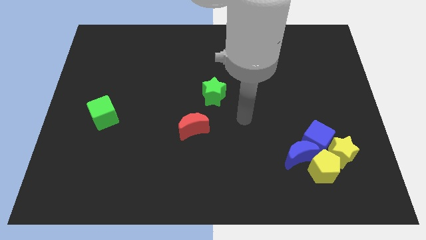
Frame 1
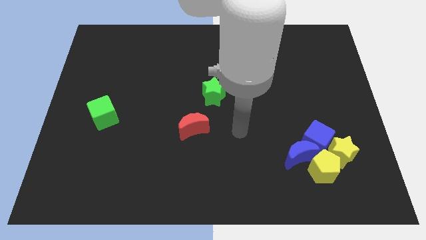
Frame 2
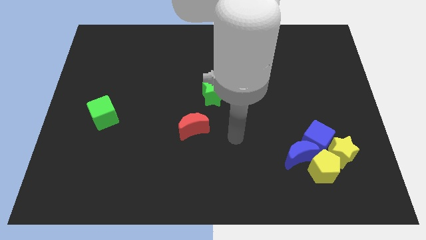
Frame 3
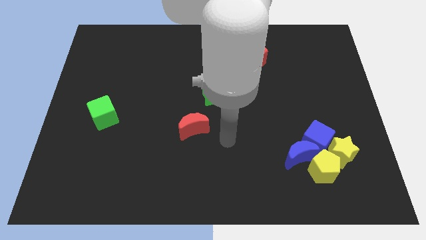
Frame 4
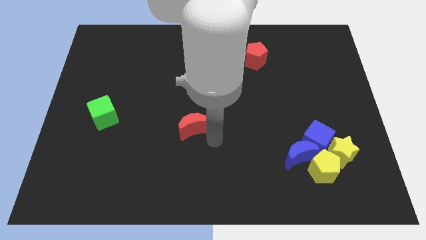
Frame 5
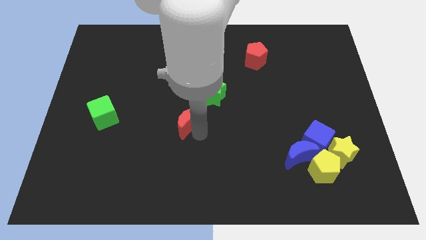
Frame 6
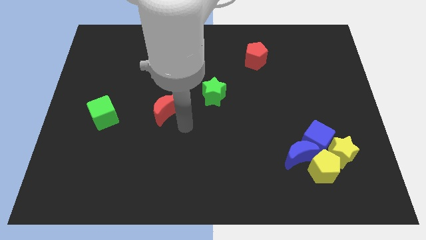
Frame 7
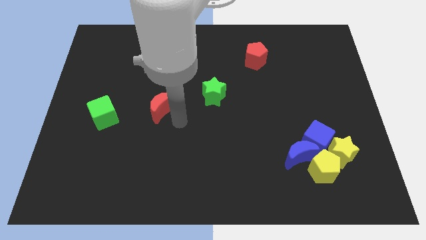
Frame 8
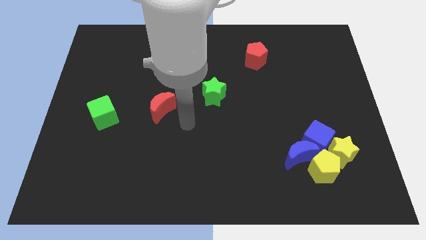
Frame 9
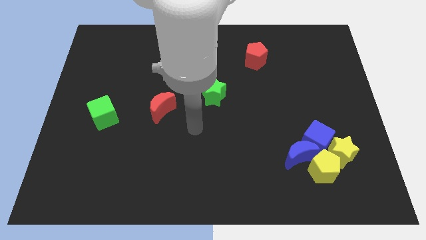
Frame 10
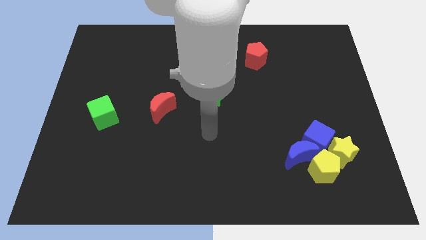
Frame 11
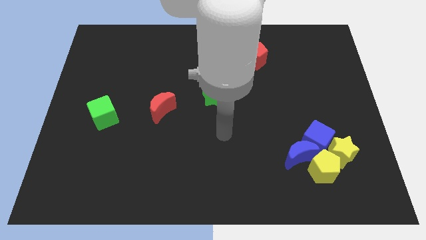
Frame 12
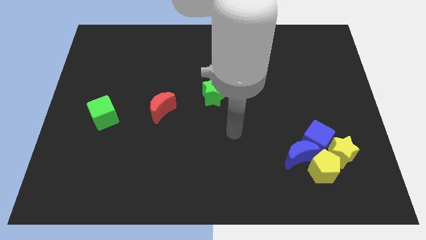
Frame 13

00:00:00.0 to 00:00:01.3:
move the red crescent in between the green star and green cube

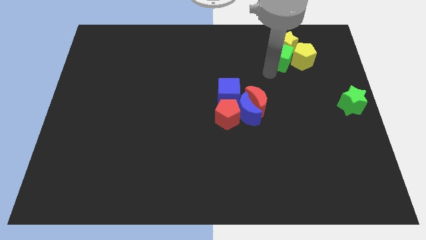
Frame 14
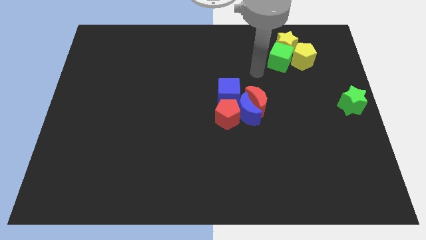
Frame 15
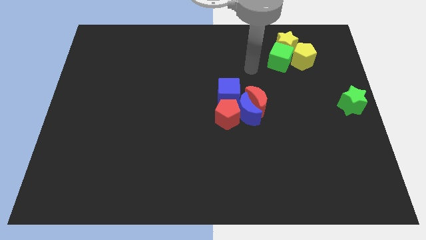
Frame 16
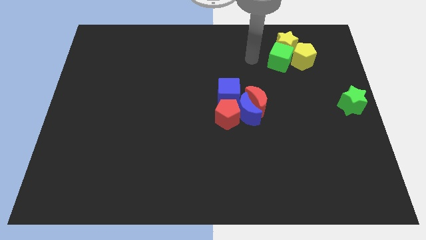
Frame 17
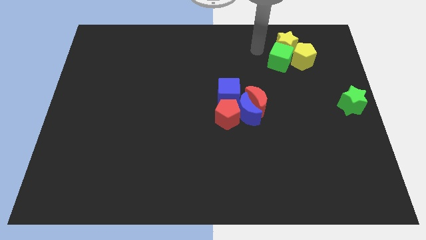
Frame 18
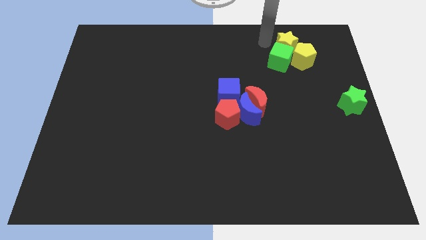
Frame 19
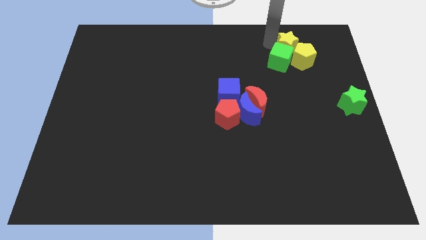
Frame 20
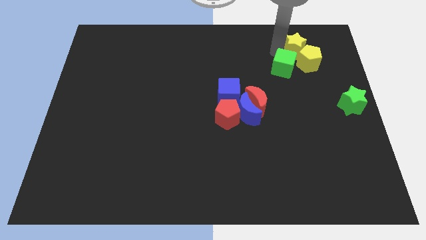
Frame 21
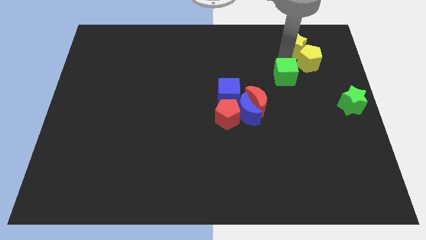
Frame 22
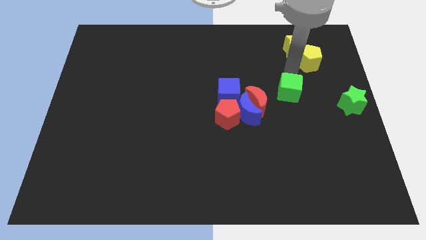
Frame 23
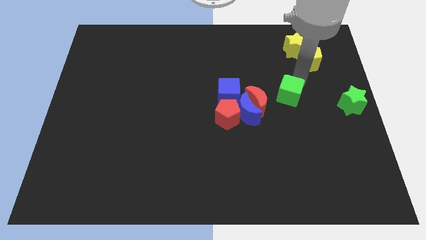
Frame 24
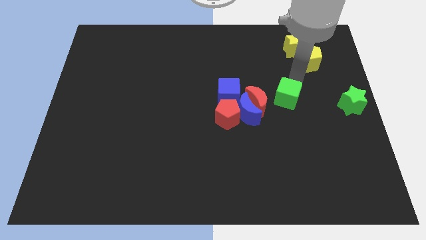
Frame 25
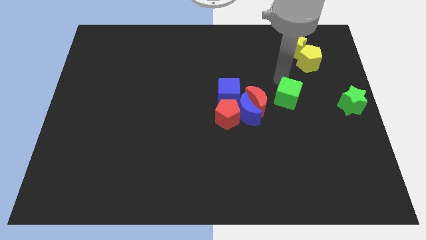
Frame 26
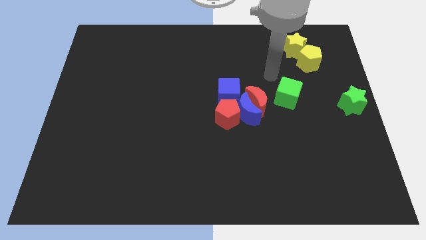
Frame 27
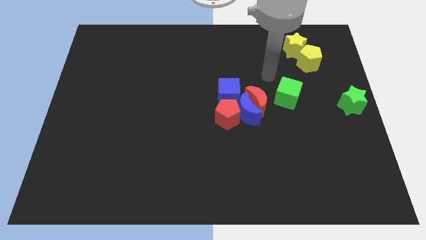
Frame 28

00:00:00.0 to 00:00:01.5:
separate the green cube from the yellow blocks

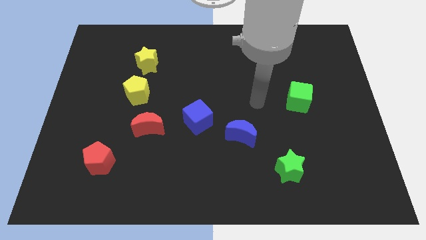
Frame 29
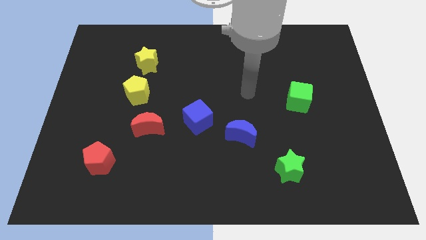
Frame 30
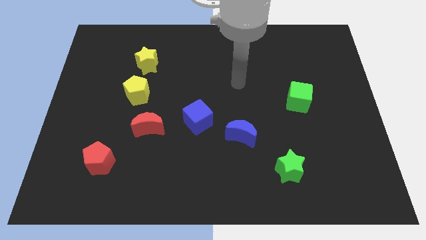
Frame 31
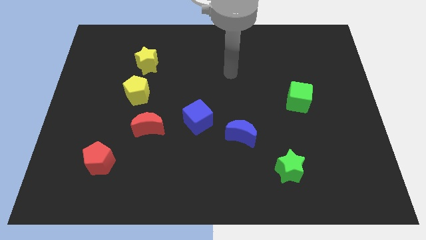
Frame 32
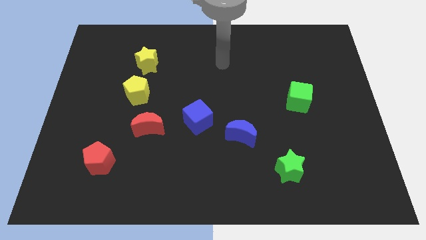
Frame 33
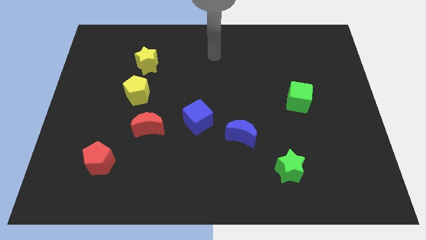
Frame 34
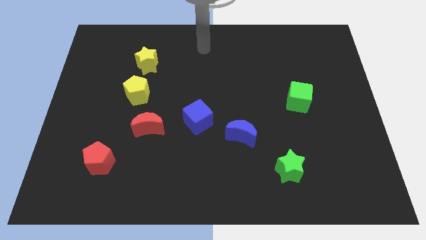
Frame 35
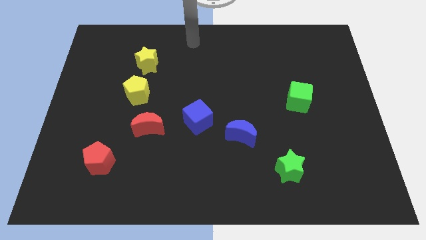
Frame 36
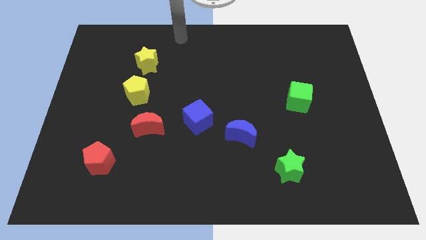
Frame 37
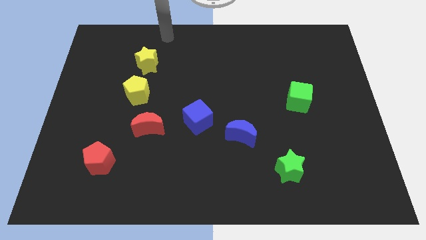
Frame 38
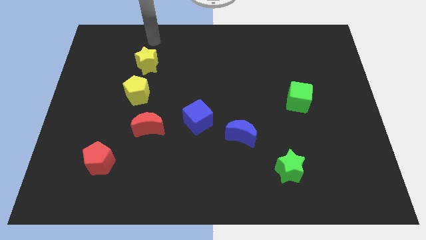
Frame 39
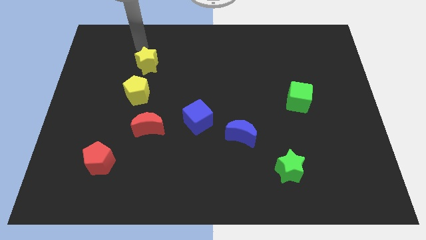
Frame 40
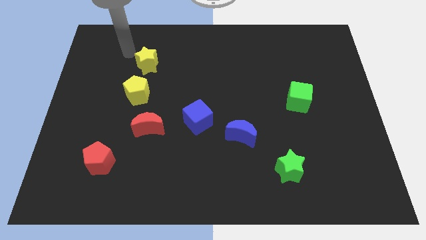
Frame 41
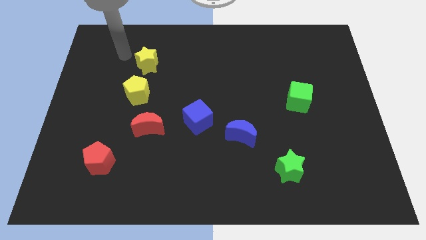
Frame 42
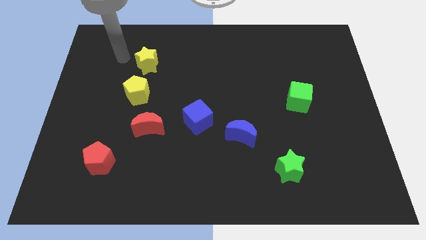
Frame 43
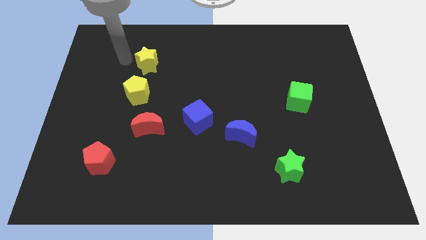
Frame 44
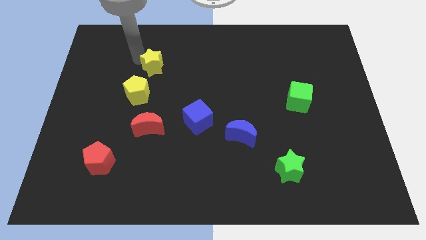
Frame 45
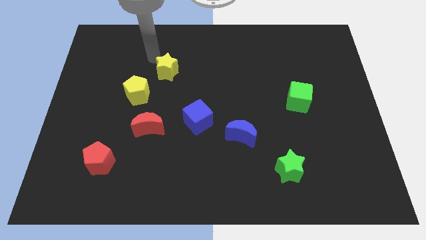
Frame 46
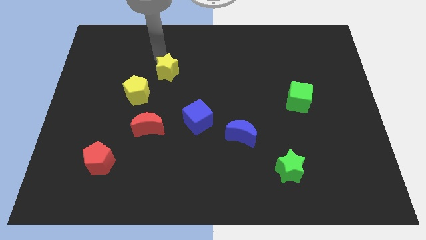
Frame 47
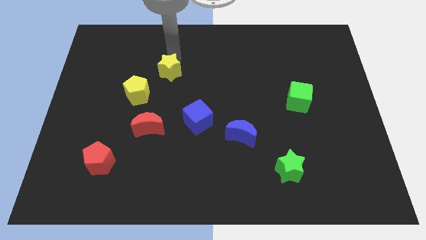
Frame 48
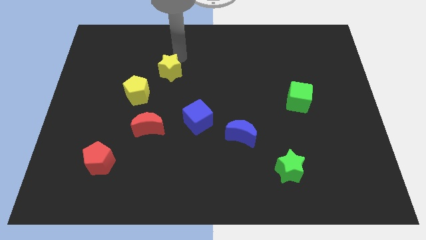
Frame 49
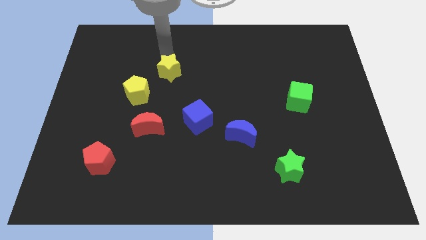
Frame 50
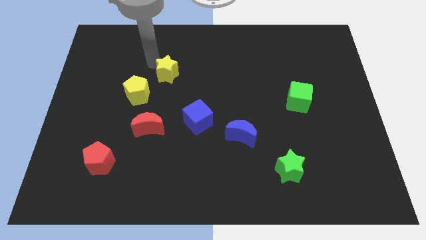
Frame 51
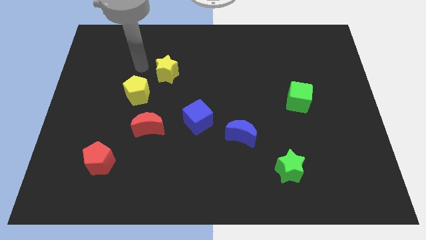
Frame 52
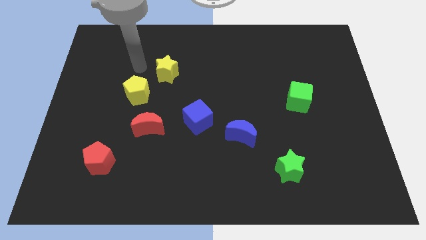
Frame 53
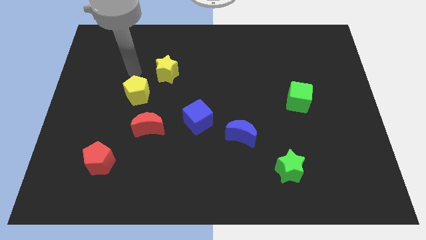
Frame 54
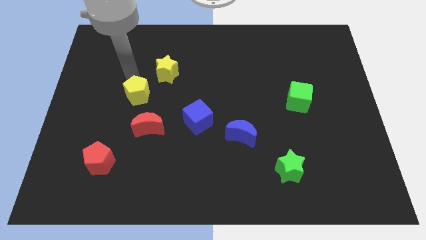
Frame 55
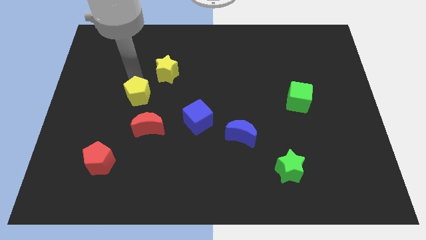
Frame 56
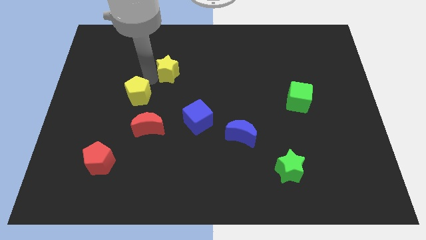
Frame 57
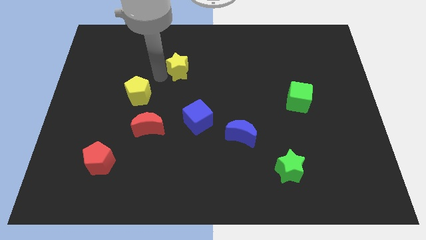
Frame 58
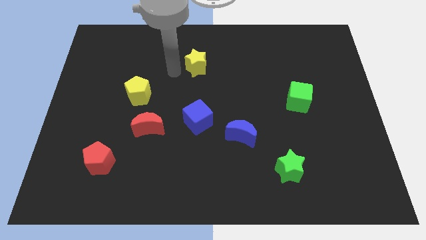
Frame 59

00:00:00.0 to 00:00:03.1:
move the yellow star vertically to the top side of the blue cube

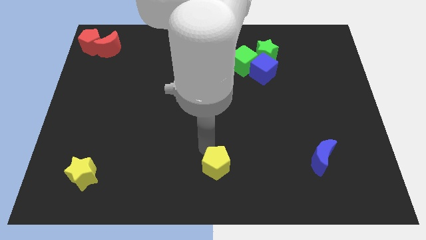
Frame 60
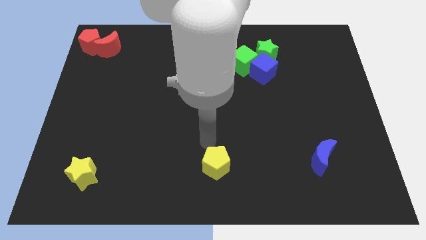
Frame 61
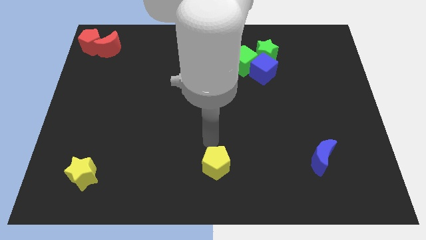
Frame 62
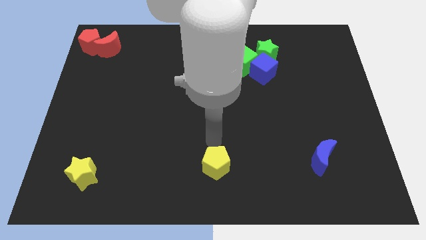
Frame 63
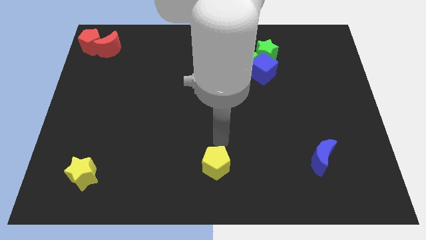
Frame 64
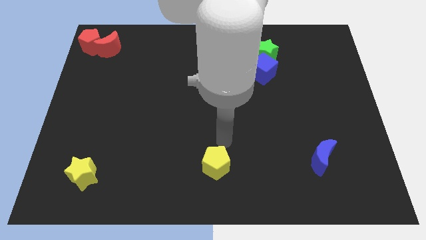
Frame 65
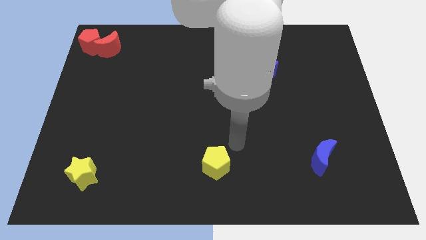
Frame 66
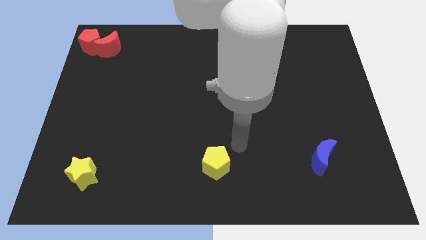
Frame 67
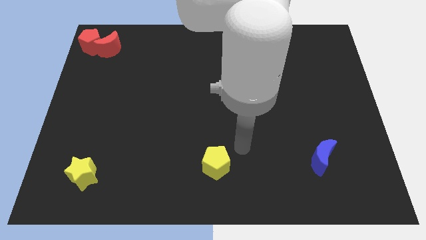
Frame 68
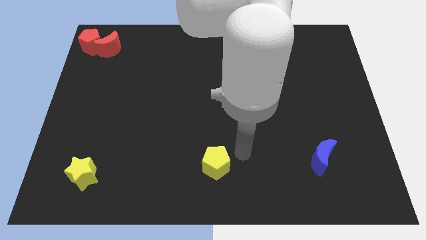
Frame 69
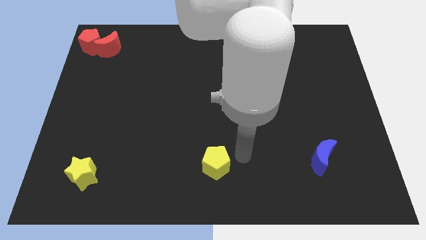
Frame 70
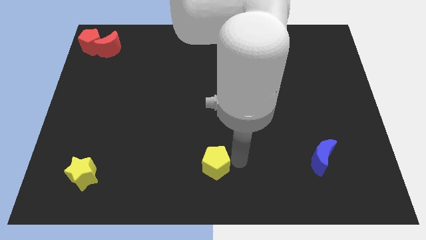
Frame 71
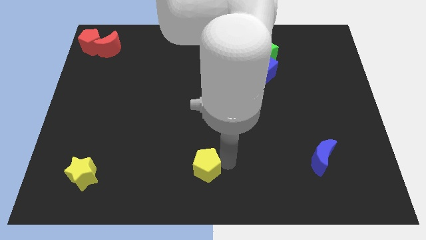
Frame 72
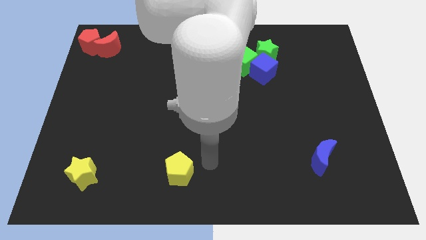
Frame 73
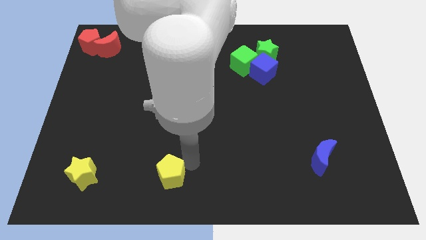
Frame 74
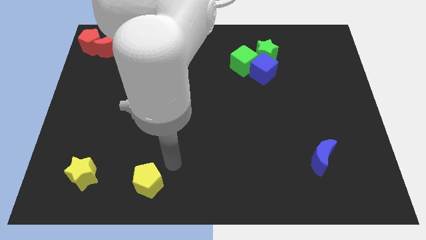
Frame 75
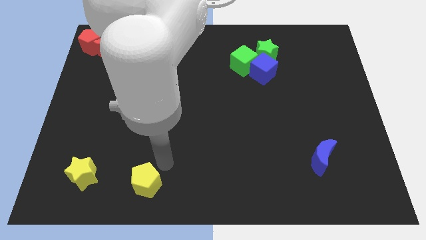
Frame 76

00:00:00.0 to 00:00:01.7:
move the yellow pentagon to the right of the yellow star

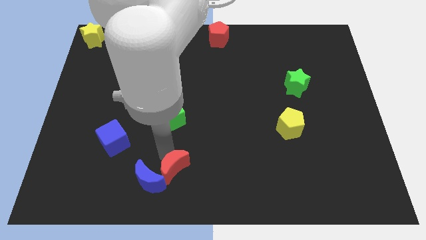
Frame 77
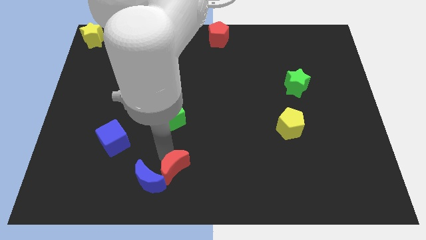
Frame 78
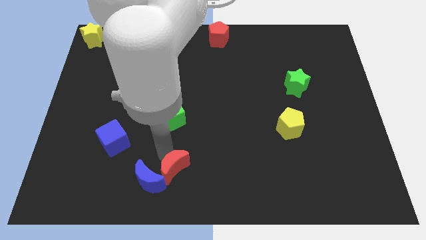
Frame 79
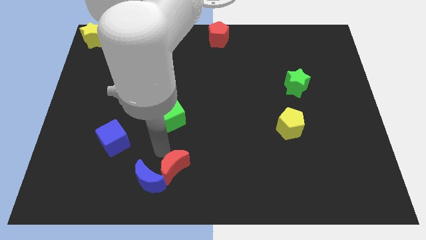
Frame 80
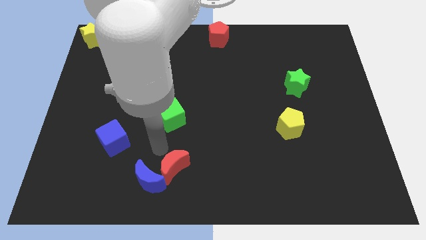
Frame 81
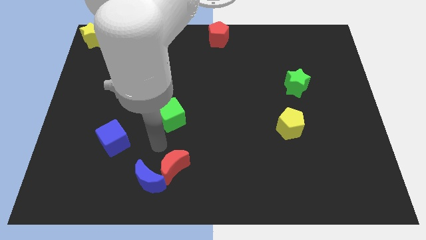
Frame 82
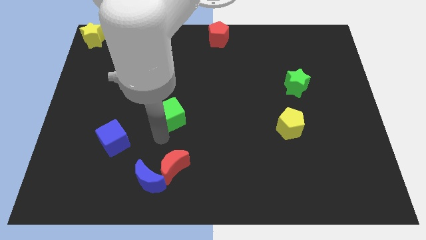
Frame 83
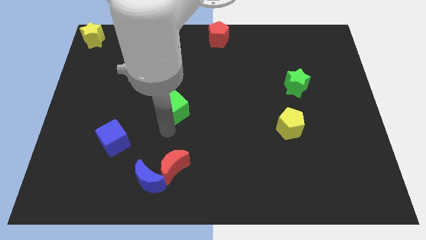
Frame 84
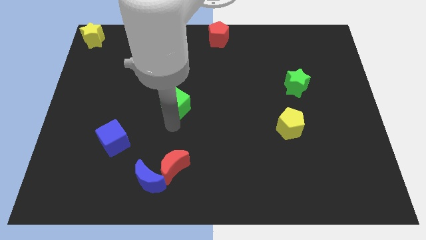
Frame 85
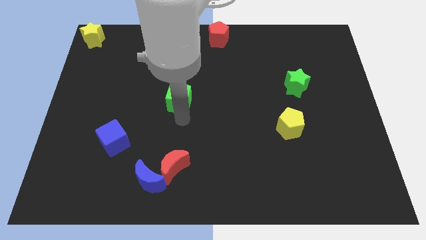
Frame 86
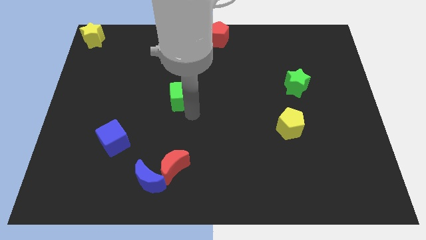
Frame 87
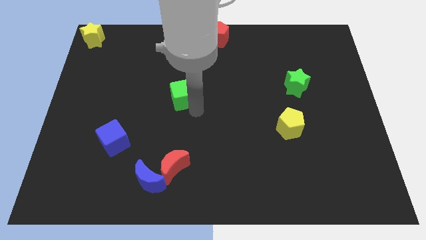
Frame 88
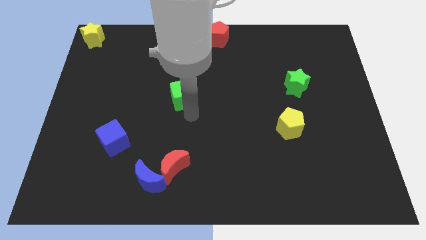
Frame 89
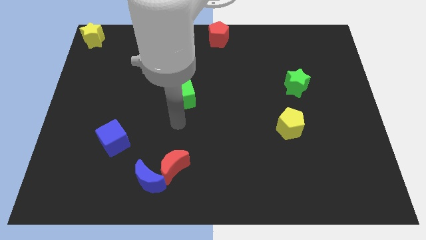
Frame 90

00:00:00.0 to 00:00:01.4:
place the green cube at center of the board
